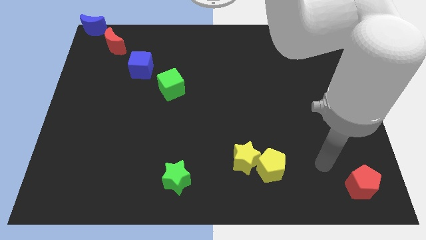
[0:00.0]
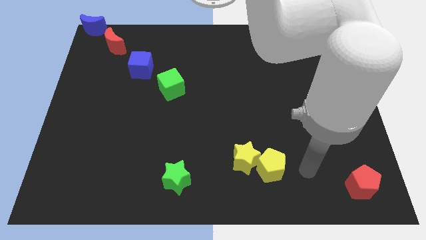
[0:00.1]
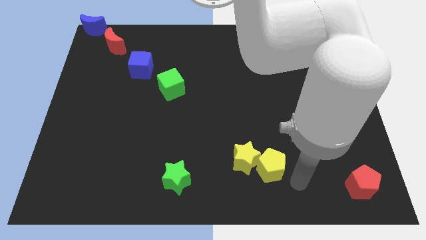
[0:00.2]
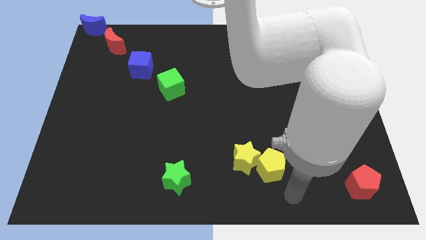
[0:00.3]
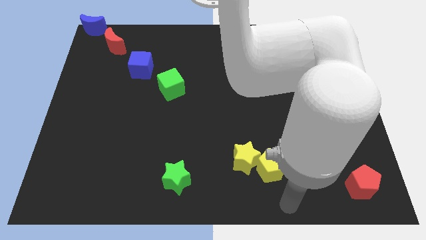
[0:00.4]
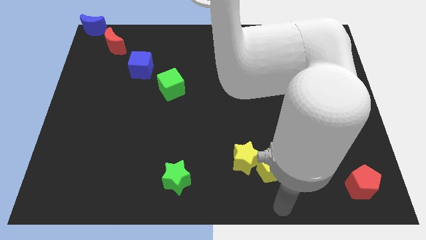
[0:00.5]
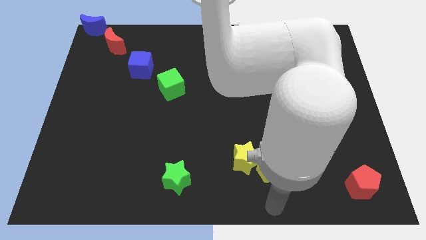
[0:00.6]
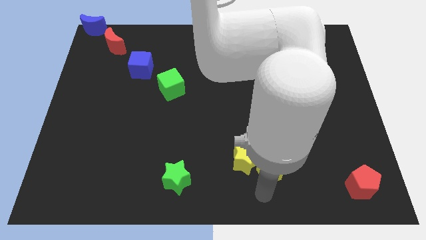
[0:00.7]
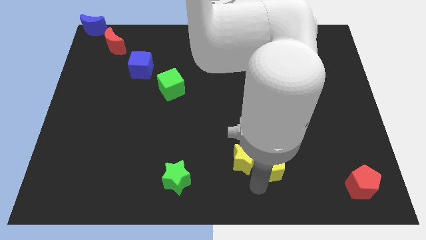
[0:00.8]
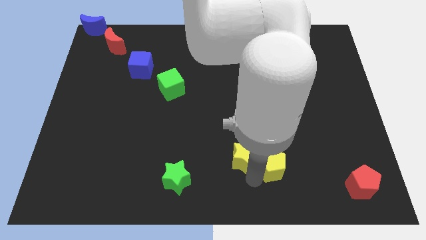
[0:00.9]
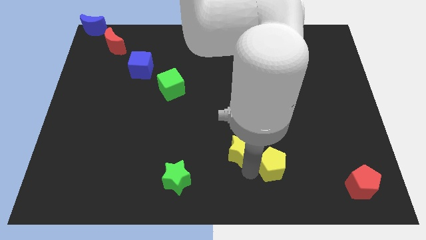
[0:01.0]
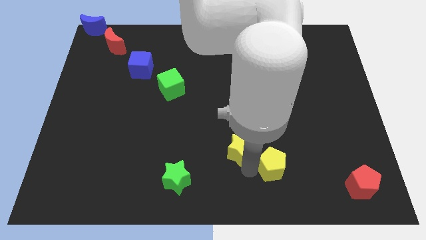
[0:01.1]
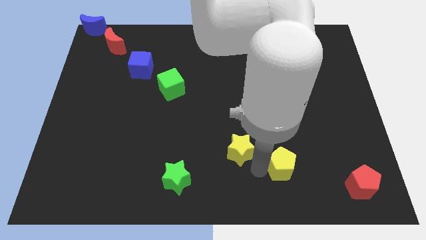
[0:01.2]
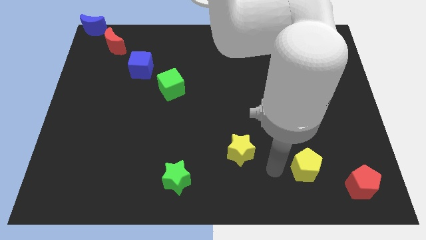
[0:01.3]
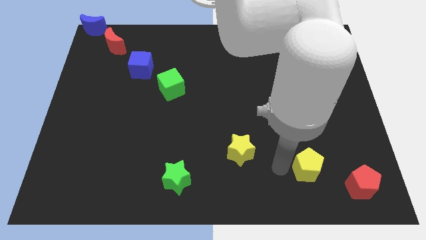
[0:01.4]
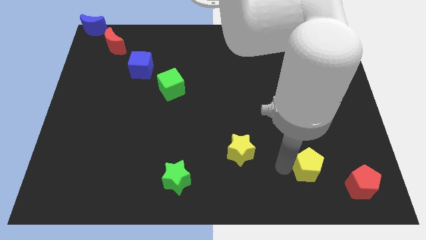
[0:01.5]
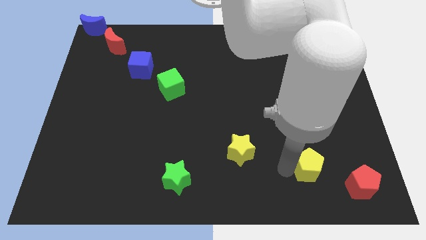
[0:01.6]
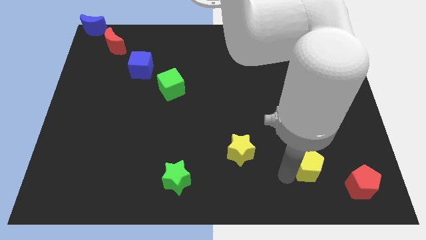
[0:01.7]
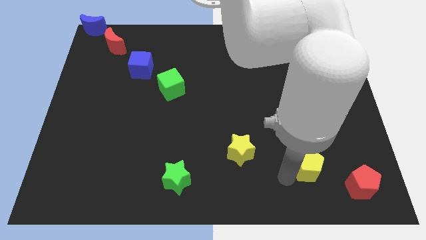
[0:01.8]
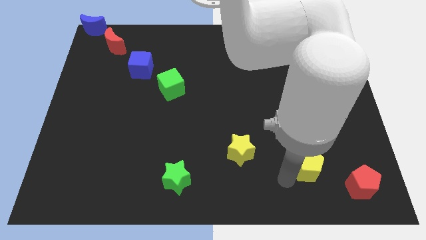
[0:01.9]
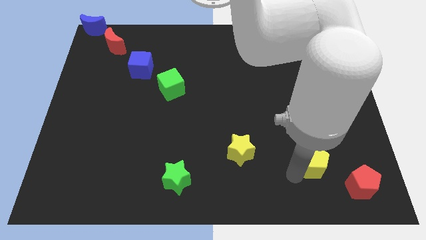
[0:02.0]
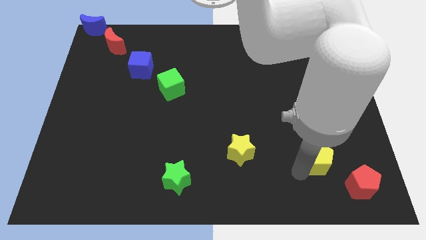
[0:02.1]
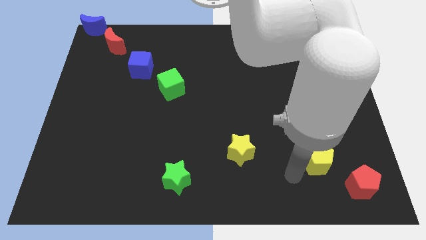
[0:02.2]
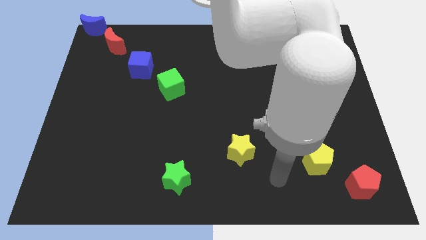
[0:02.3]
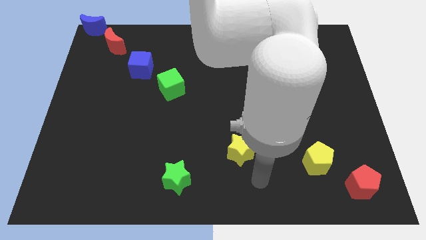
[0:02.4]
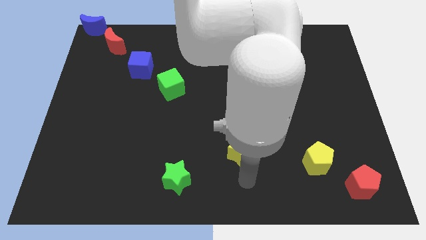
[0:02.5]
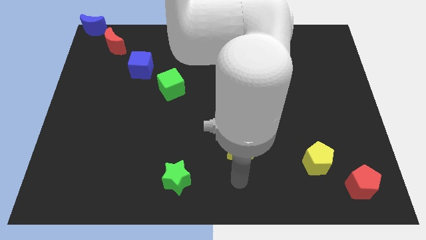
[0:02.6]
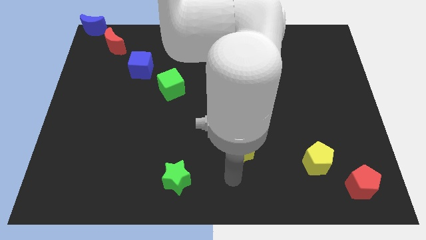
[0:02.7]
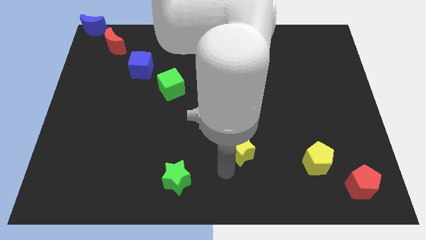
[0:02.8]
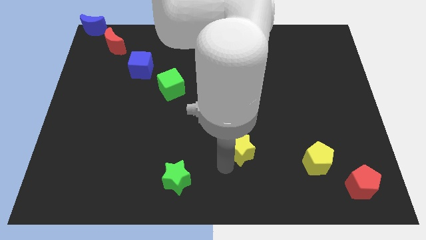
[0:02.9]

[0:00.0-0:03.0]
move the yellow pentagon to the top left side of the red pentagon

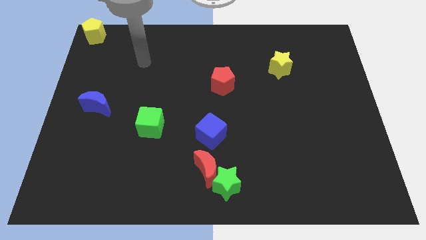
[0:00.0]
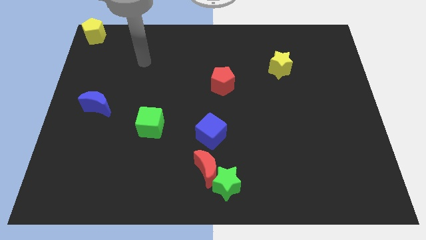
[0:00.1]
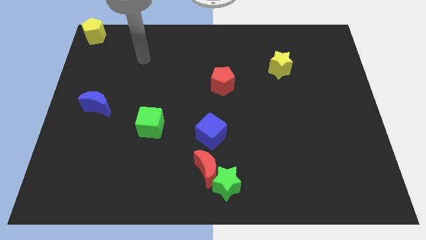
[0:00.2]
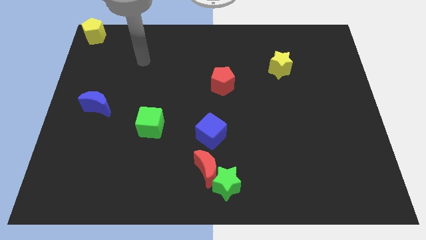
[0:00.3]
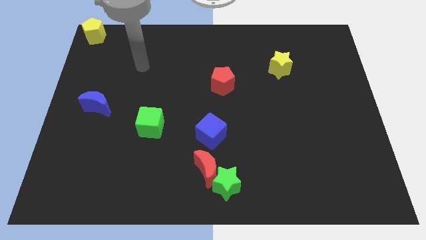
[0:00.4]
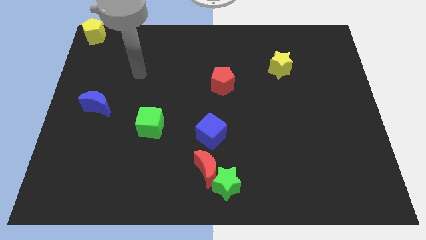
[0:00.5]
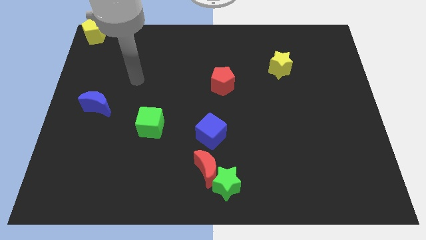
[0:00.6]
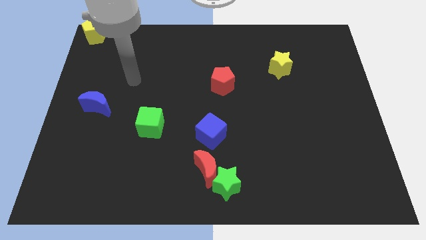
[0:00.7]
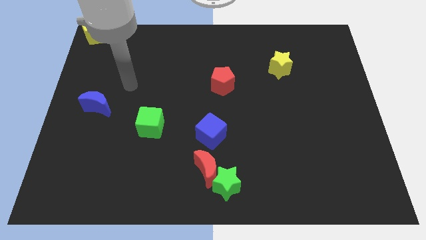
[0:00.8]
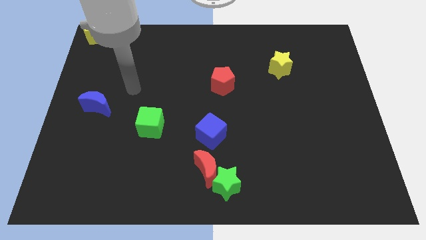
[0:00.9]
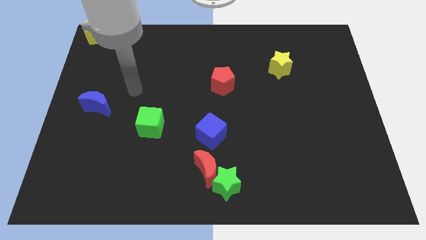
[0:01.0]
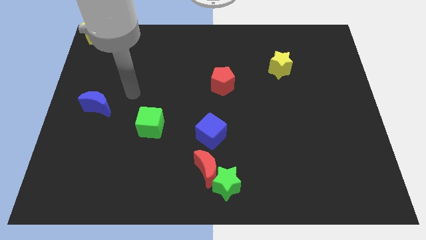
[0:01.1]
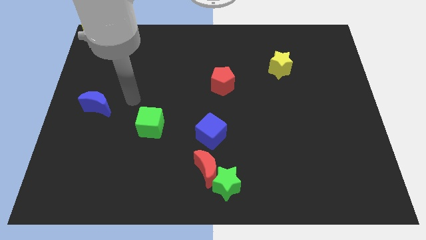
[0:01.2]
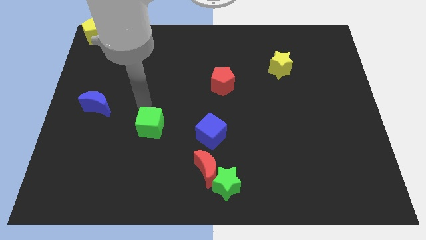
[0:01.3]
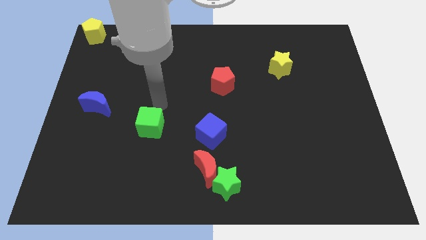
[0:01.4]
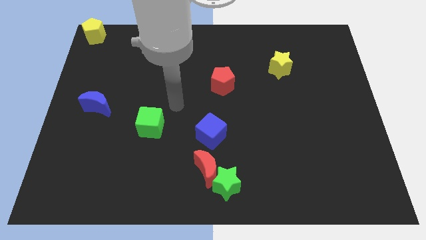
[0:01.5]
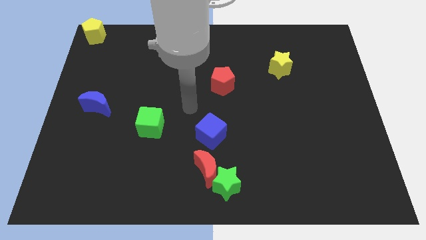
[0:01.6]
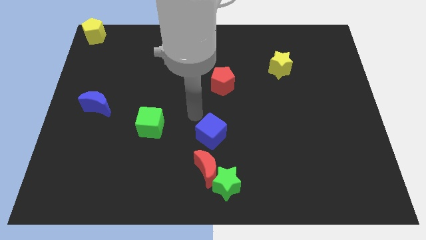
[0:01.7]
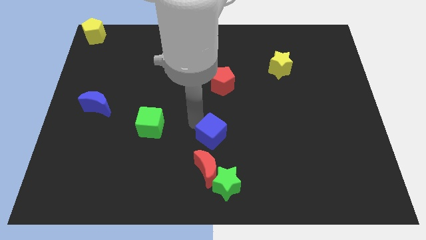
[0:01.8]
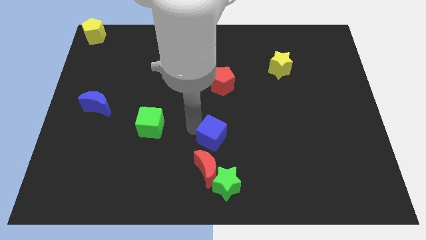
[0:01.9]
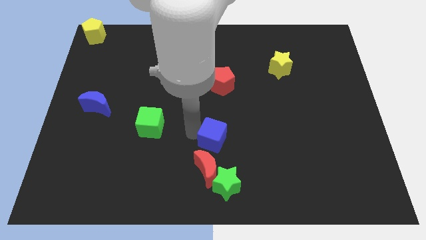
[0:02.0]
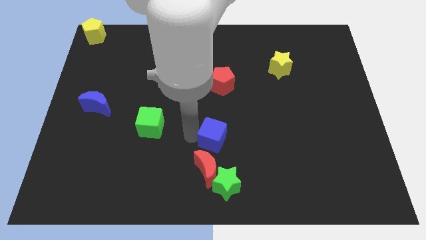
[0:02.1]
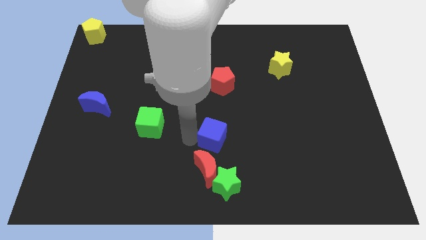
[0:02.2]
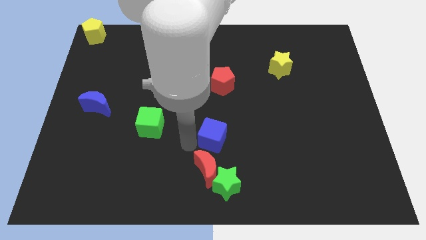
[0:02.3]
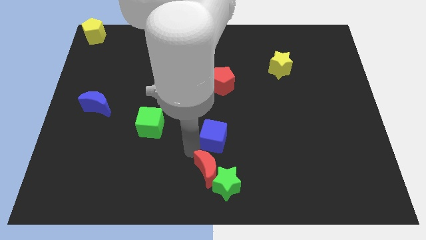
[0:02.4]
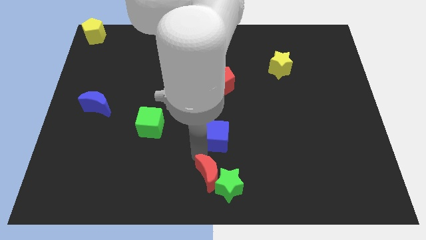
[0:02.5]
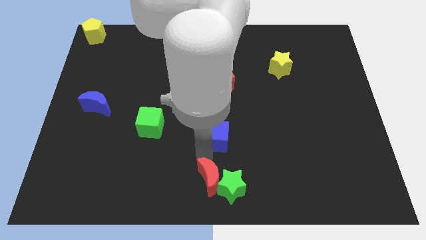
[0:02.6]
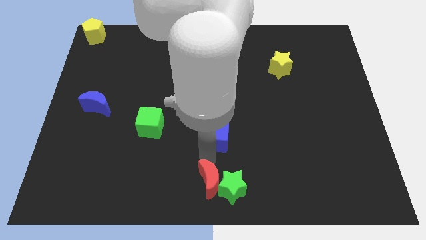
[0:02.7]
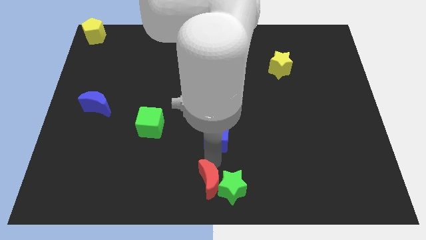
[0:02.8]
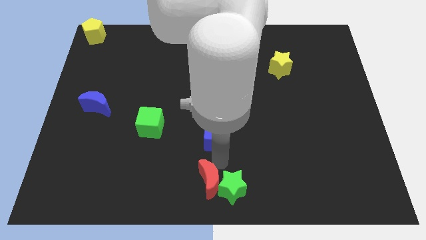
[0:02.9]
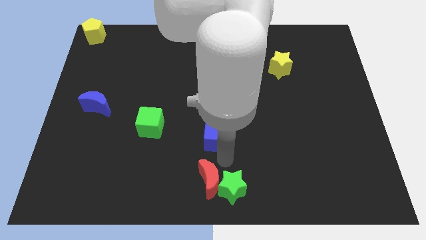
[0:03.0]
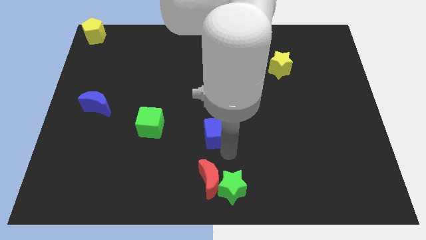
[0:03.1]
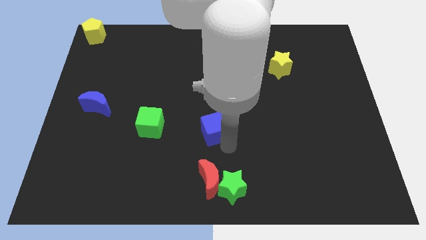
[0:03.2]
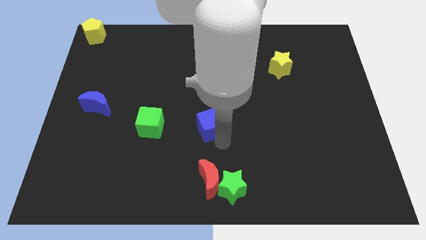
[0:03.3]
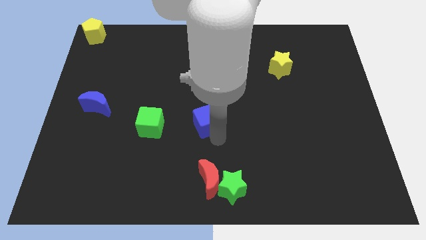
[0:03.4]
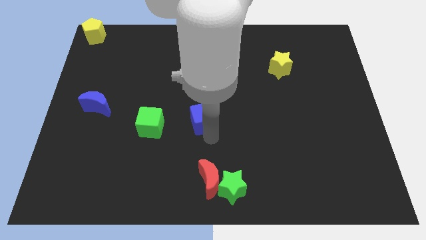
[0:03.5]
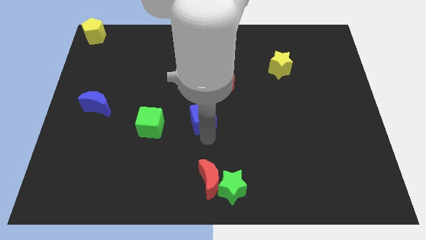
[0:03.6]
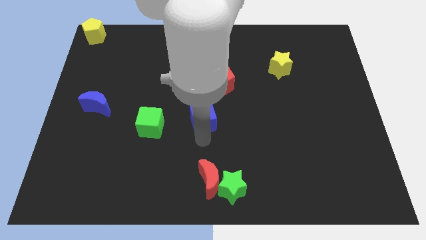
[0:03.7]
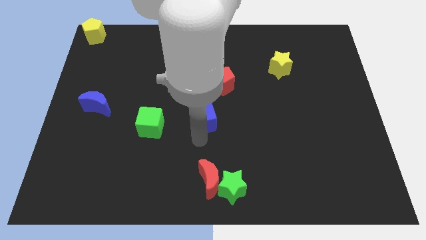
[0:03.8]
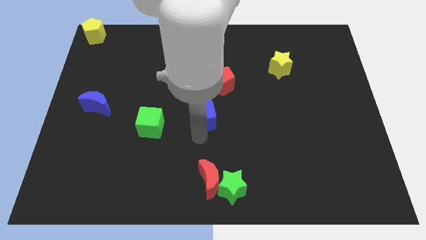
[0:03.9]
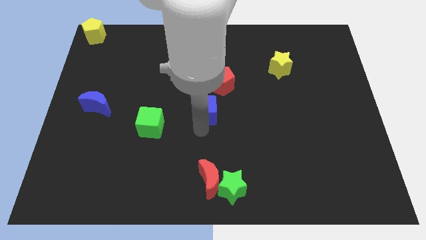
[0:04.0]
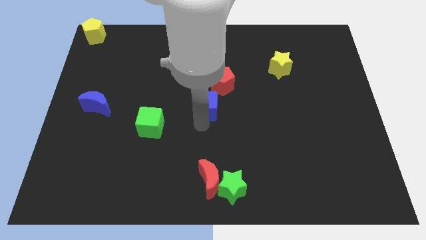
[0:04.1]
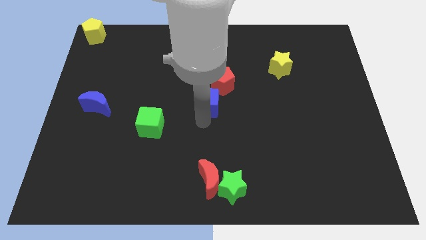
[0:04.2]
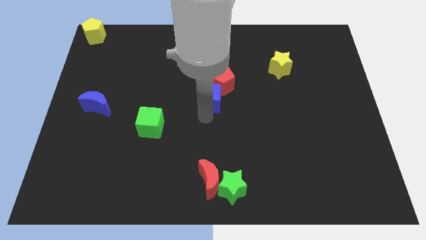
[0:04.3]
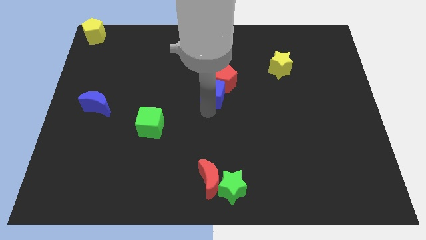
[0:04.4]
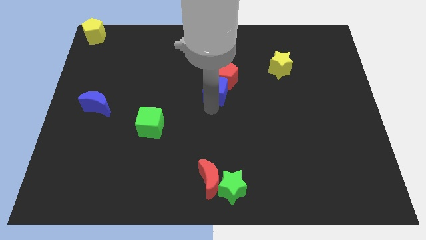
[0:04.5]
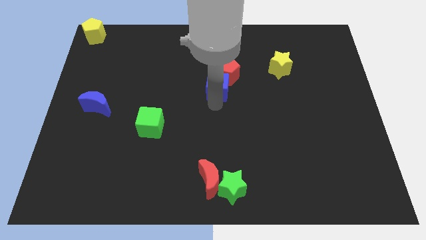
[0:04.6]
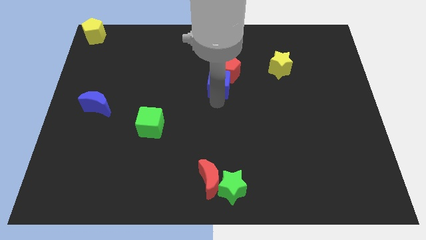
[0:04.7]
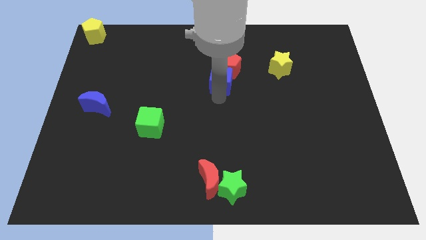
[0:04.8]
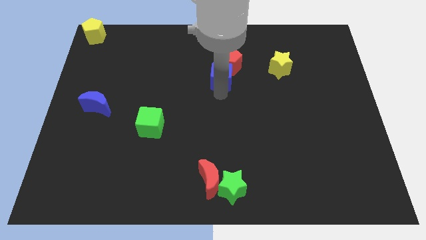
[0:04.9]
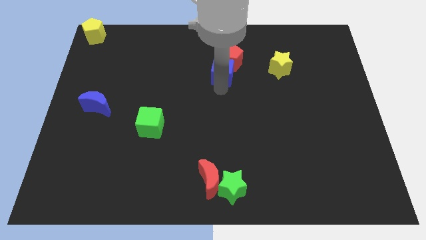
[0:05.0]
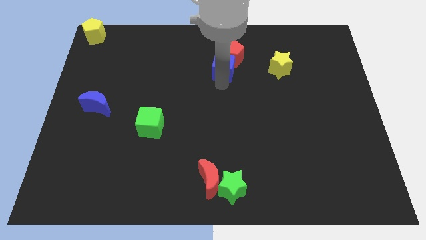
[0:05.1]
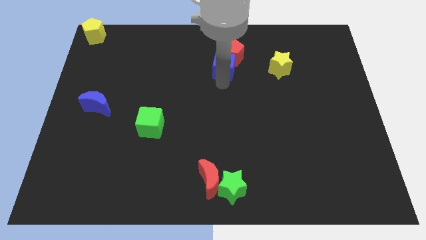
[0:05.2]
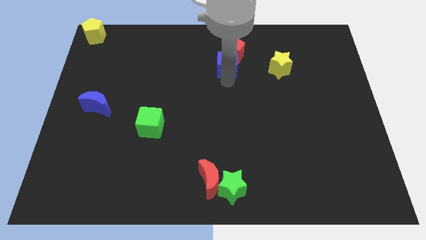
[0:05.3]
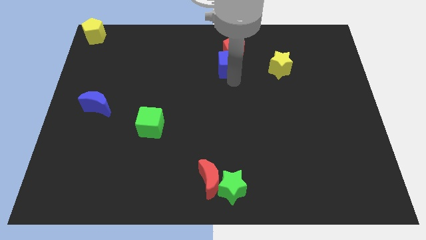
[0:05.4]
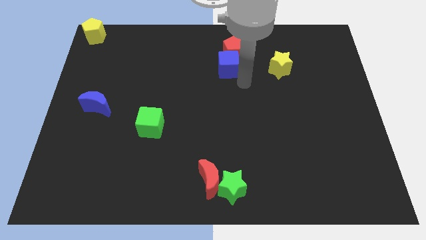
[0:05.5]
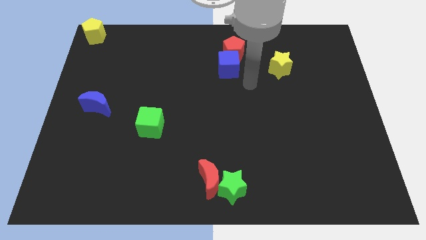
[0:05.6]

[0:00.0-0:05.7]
push the blue to the left of the yellow star

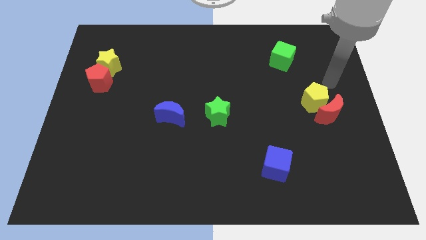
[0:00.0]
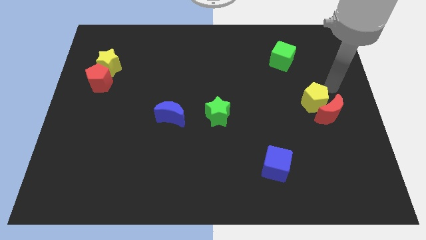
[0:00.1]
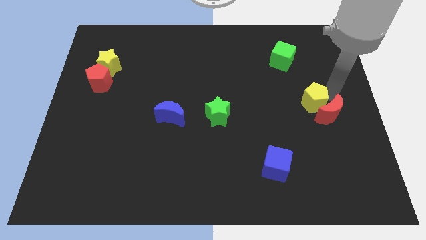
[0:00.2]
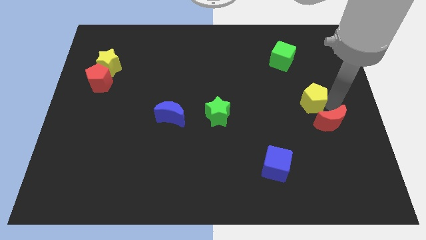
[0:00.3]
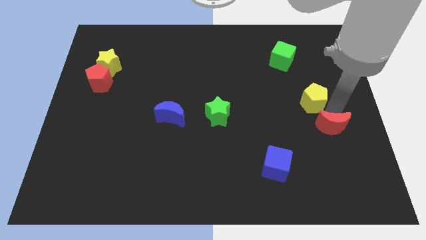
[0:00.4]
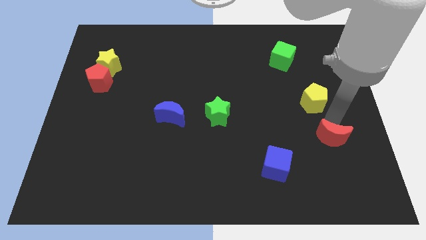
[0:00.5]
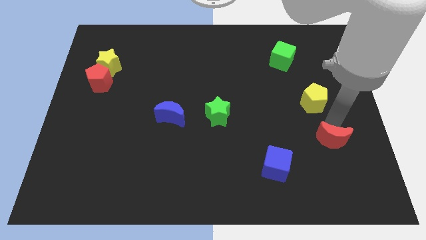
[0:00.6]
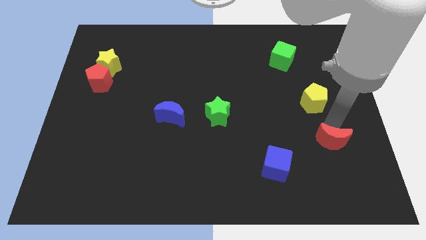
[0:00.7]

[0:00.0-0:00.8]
separate red moon from yellow pentagon
